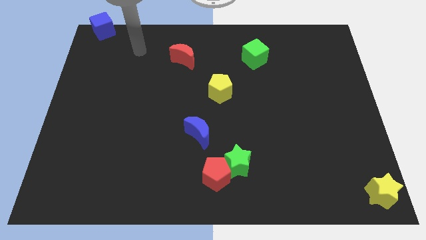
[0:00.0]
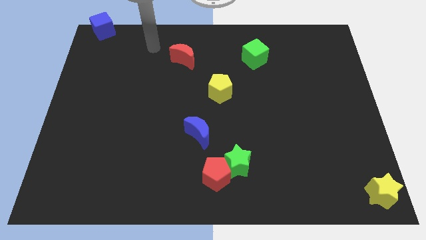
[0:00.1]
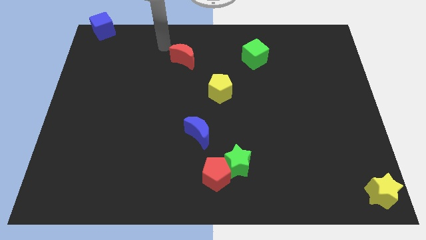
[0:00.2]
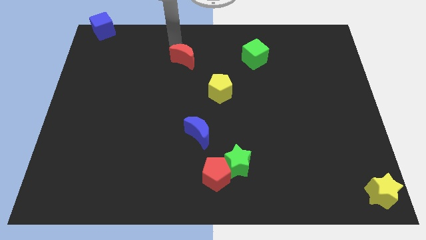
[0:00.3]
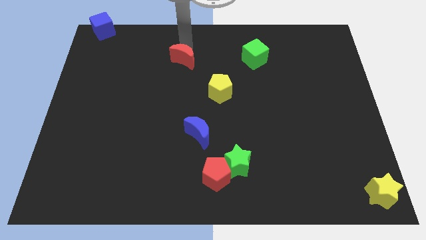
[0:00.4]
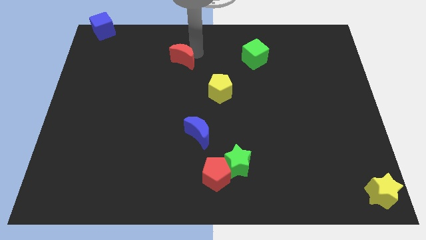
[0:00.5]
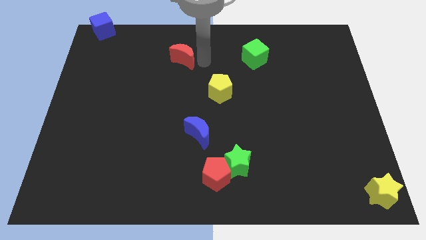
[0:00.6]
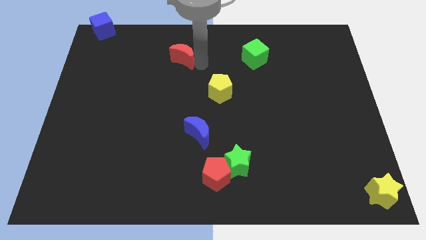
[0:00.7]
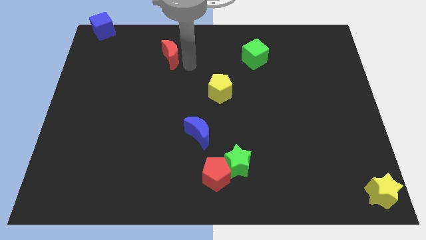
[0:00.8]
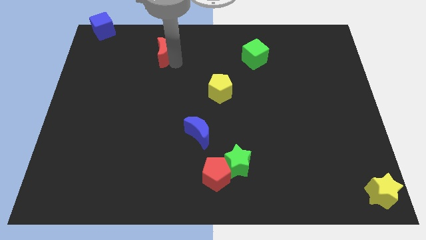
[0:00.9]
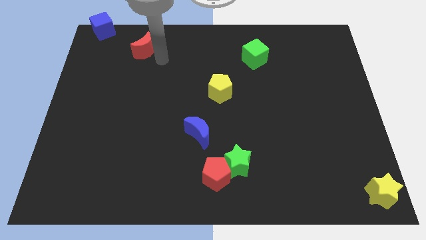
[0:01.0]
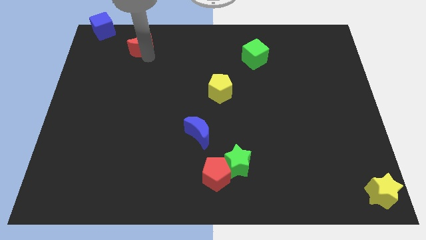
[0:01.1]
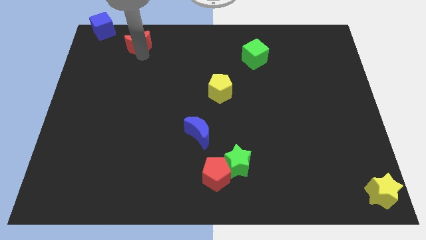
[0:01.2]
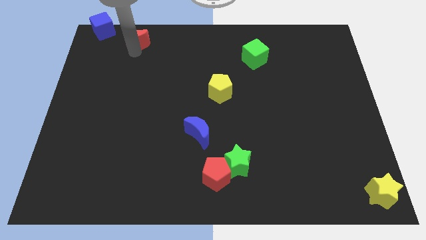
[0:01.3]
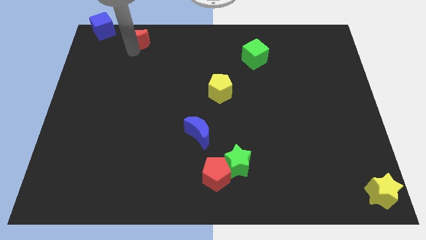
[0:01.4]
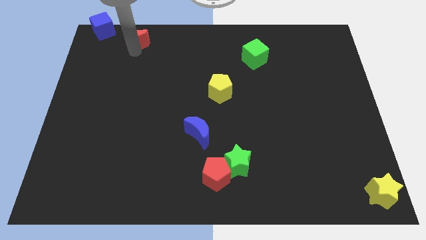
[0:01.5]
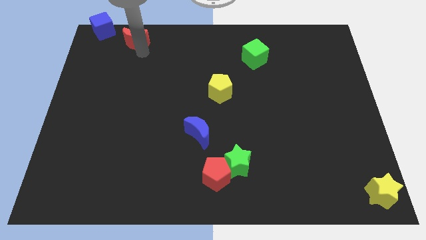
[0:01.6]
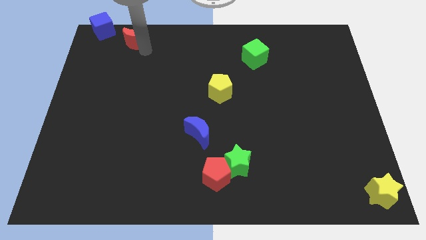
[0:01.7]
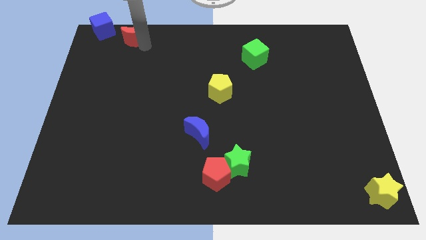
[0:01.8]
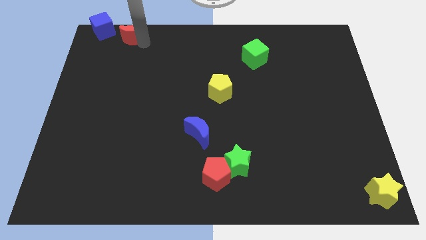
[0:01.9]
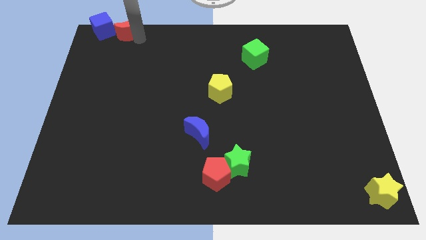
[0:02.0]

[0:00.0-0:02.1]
move the red moon to the right of blue cube

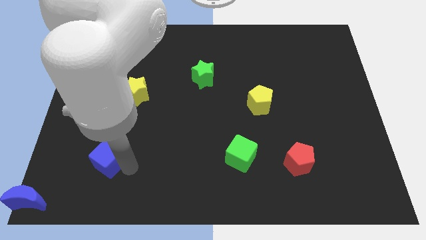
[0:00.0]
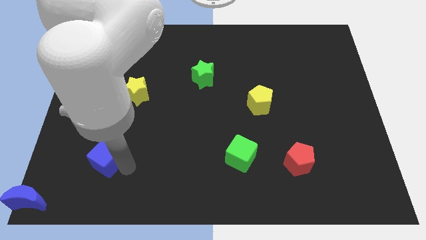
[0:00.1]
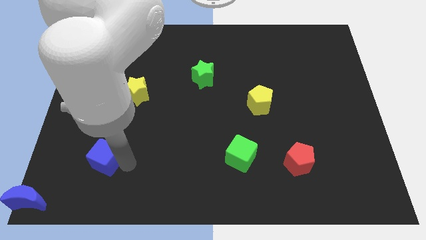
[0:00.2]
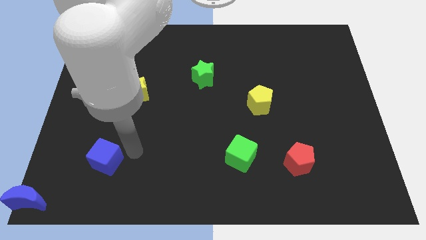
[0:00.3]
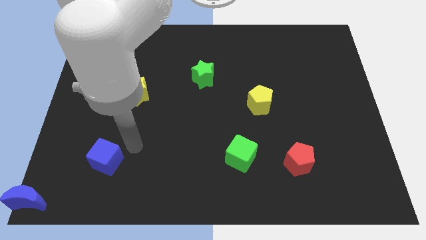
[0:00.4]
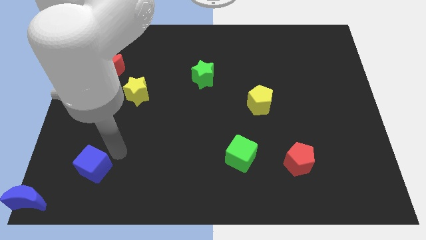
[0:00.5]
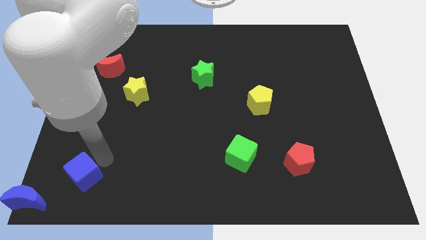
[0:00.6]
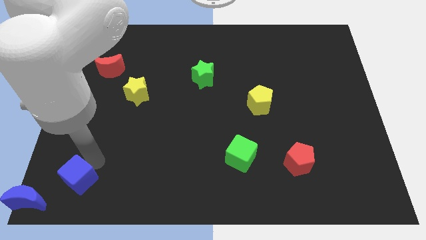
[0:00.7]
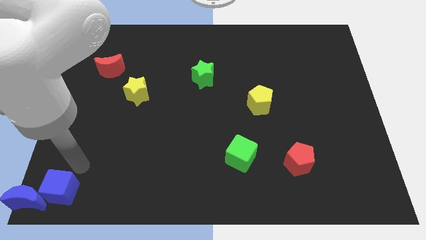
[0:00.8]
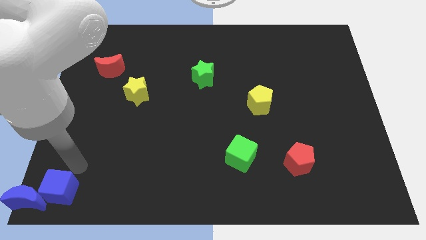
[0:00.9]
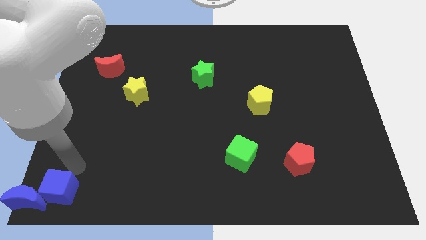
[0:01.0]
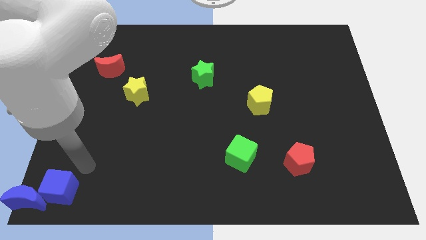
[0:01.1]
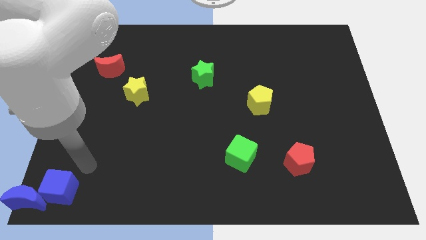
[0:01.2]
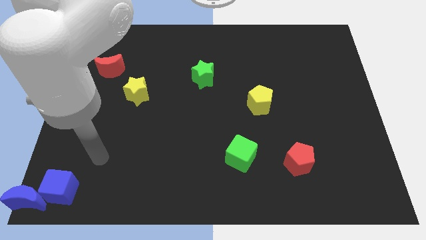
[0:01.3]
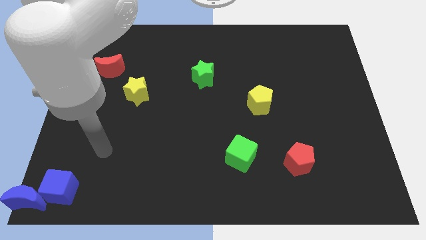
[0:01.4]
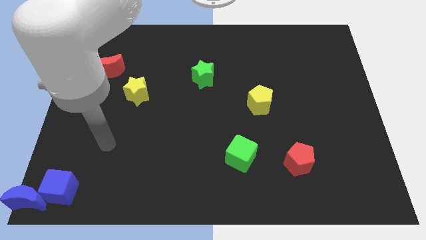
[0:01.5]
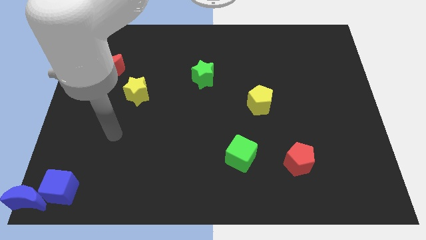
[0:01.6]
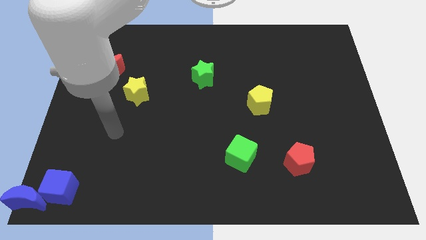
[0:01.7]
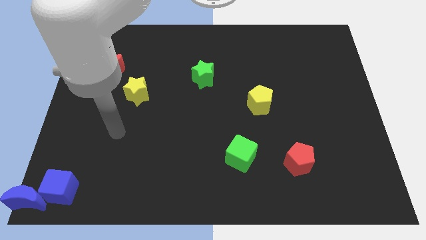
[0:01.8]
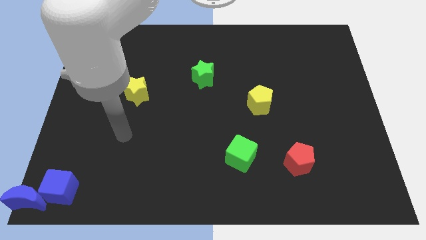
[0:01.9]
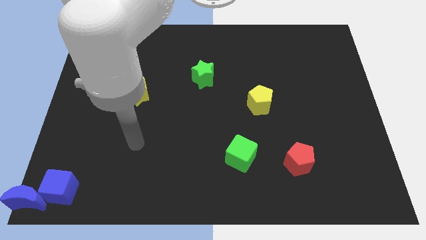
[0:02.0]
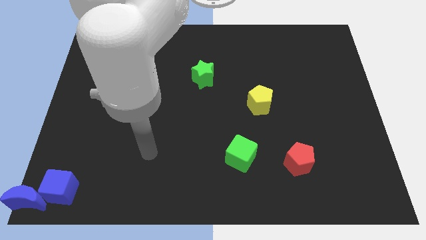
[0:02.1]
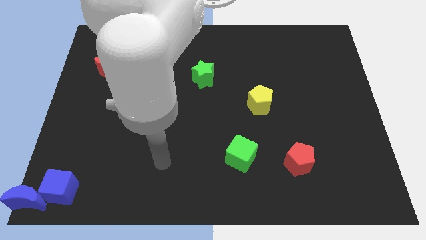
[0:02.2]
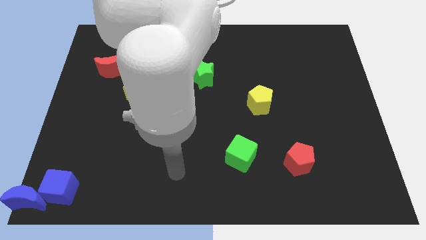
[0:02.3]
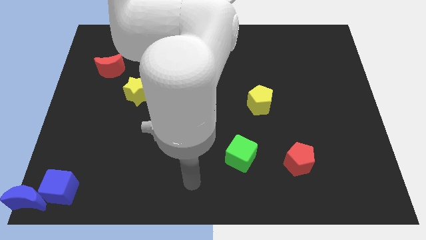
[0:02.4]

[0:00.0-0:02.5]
move the blue cube close to the blue crescent

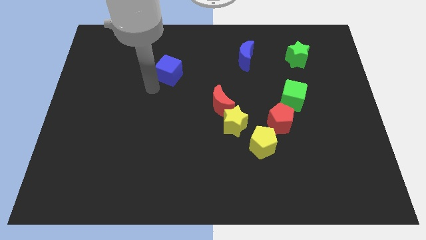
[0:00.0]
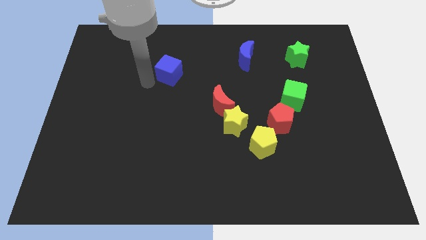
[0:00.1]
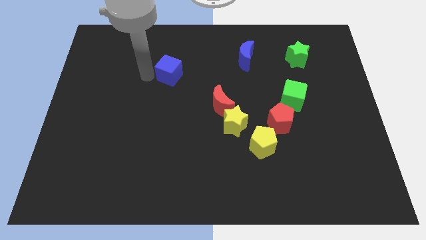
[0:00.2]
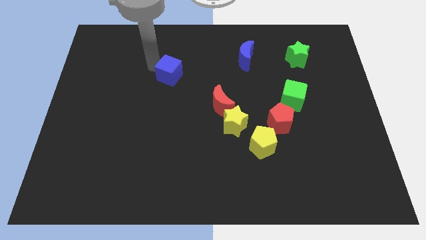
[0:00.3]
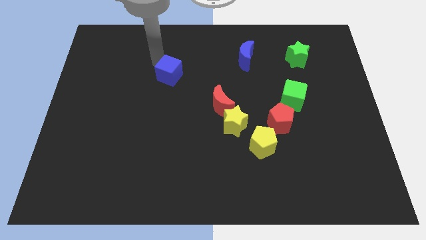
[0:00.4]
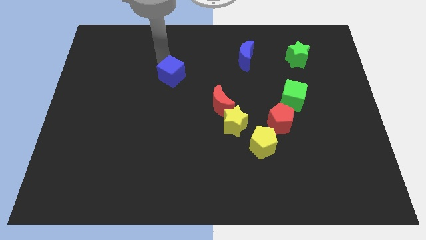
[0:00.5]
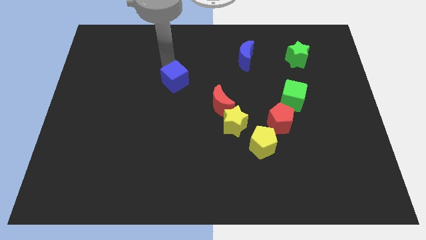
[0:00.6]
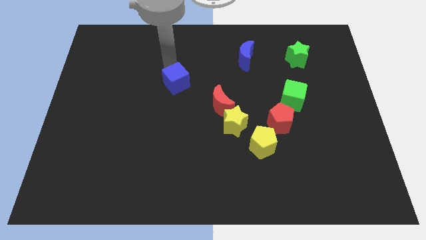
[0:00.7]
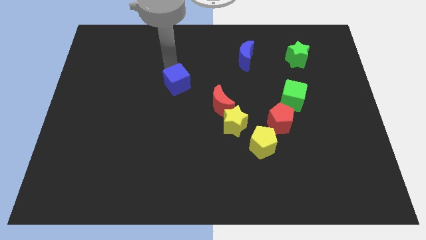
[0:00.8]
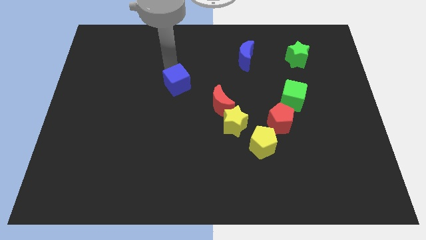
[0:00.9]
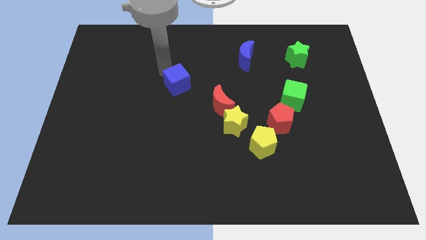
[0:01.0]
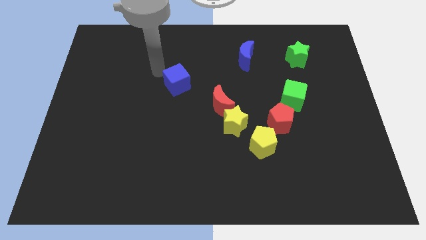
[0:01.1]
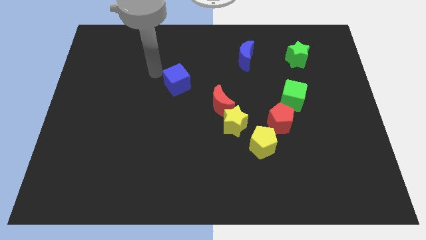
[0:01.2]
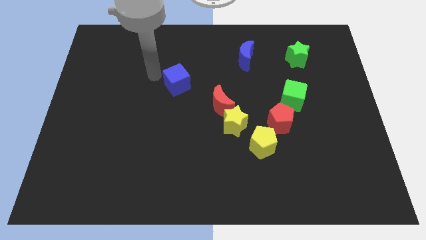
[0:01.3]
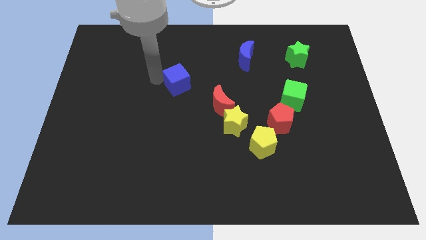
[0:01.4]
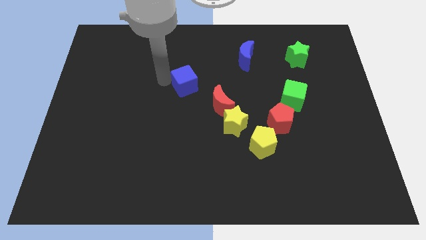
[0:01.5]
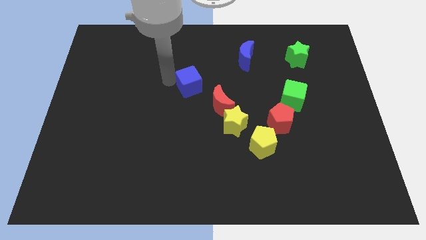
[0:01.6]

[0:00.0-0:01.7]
push the blue cube slightly to the bottom of the board

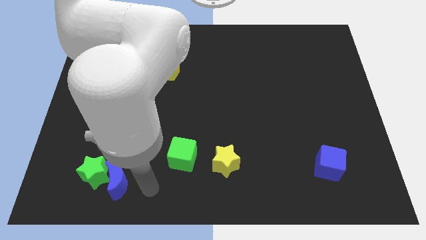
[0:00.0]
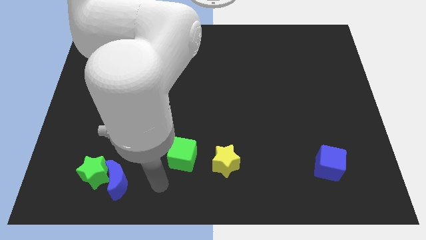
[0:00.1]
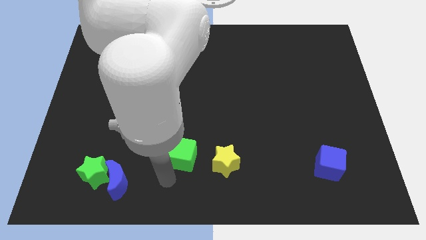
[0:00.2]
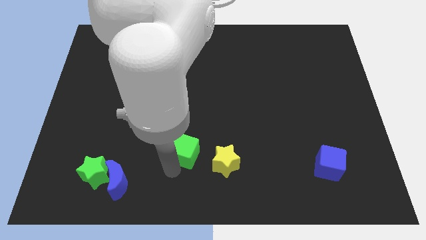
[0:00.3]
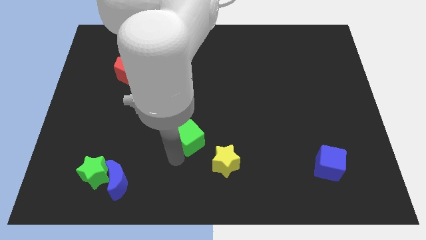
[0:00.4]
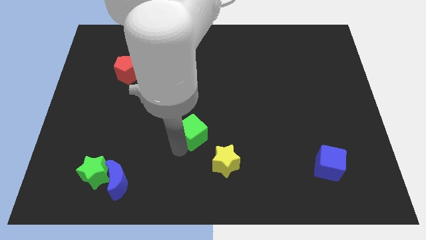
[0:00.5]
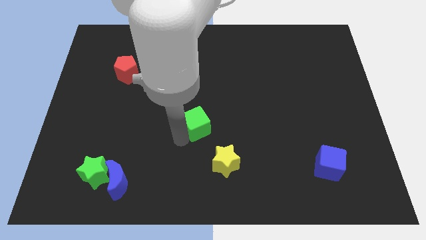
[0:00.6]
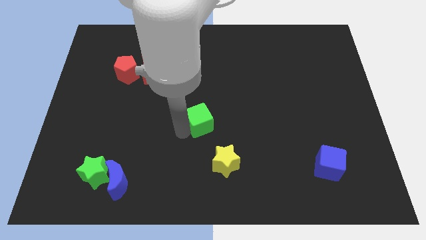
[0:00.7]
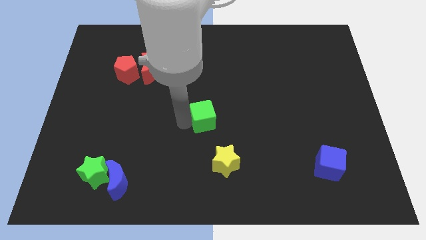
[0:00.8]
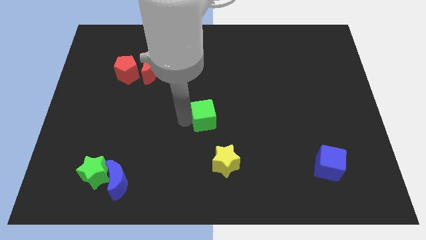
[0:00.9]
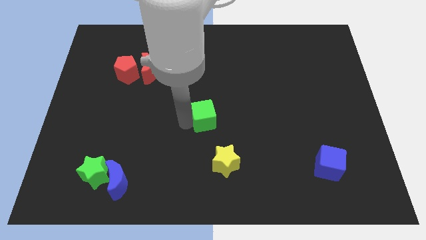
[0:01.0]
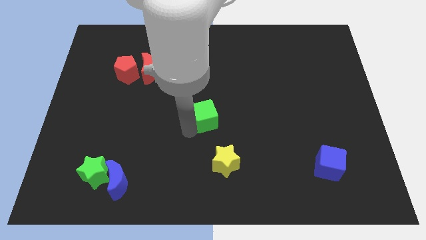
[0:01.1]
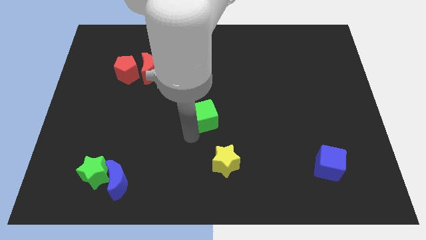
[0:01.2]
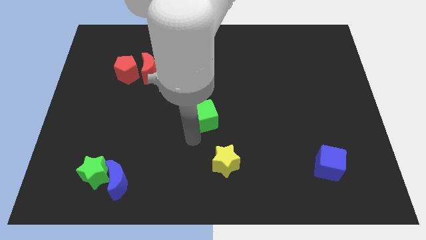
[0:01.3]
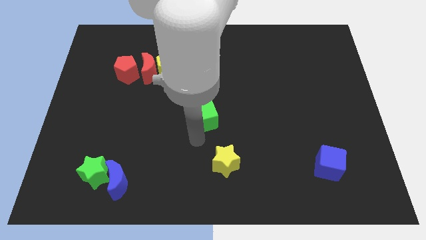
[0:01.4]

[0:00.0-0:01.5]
put the green cube at the top left of the yellow star

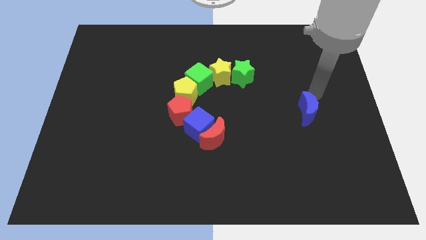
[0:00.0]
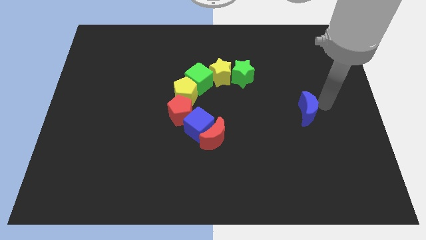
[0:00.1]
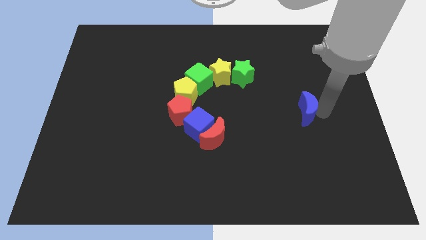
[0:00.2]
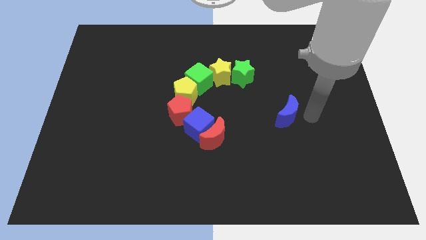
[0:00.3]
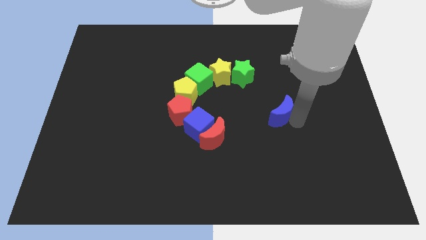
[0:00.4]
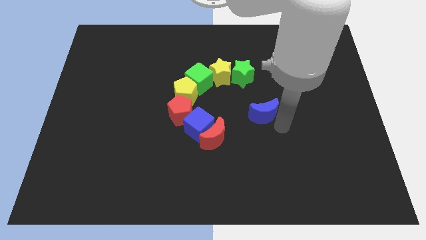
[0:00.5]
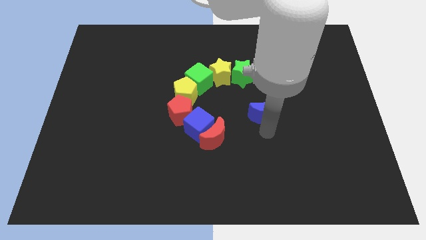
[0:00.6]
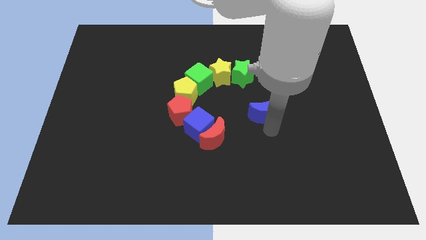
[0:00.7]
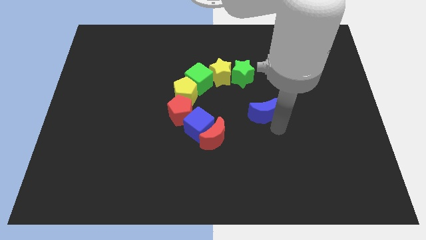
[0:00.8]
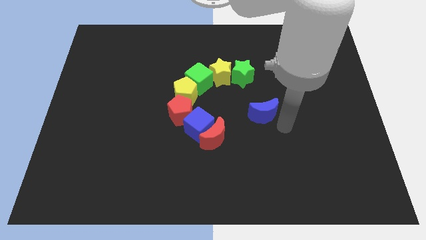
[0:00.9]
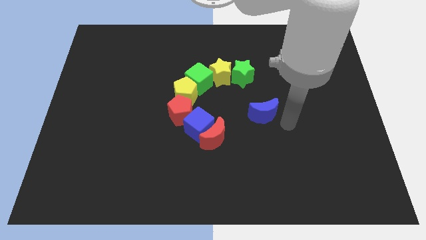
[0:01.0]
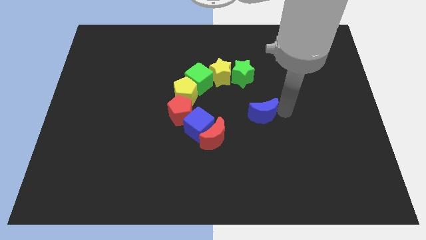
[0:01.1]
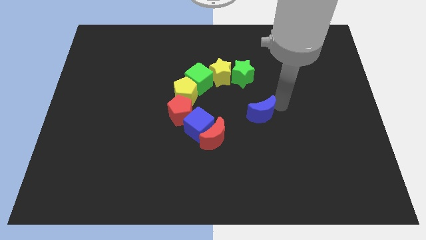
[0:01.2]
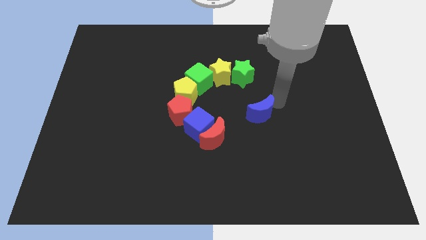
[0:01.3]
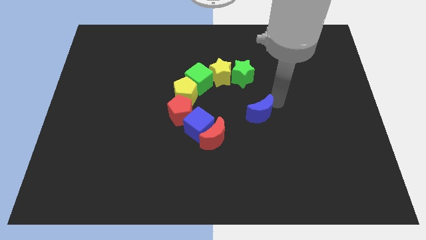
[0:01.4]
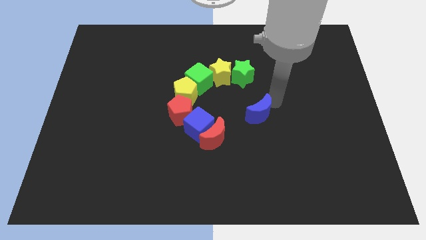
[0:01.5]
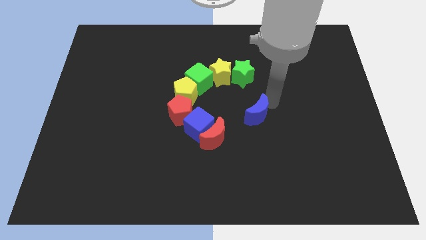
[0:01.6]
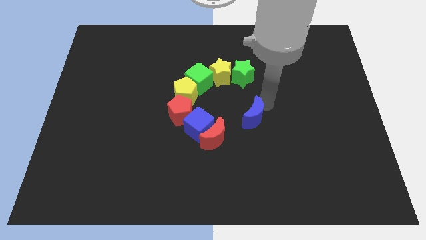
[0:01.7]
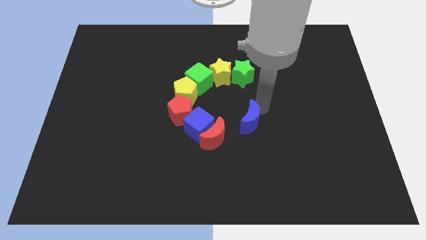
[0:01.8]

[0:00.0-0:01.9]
push blue moon close to the red moon
